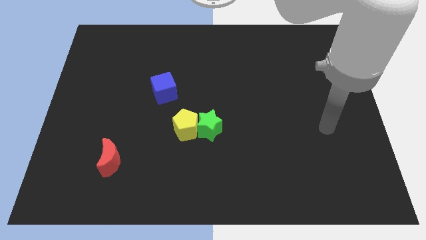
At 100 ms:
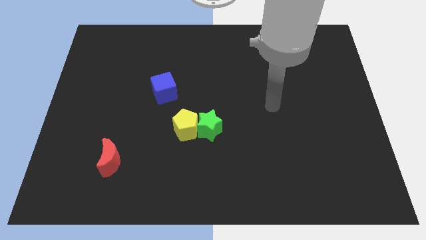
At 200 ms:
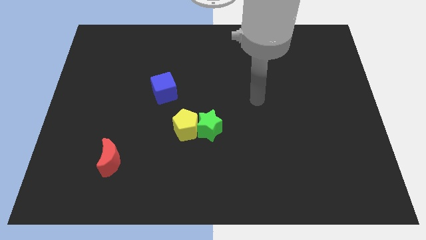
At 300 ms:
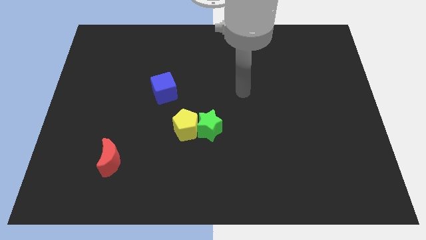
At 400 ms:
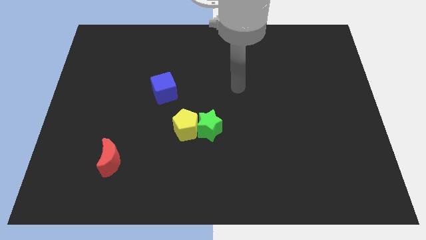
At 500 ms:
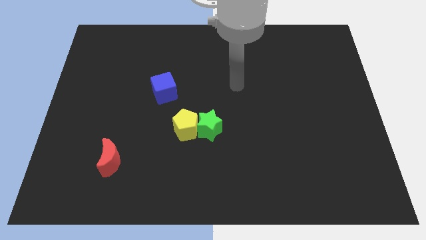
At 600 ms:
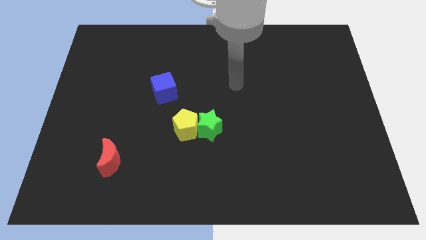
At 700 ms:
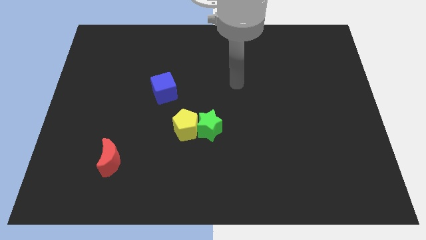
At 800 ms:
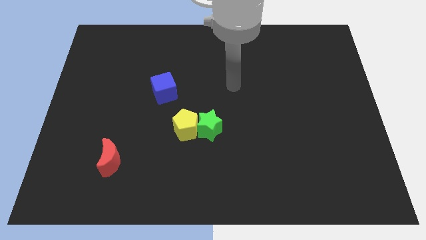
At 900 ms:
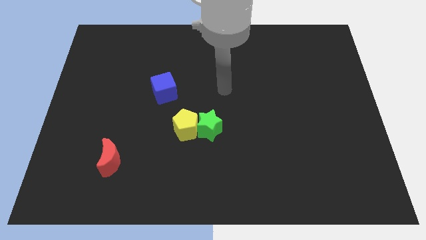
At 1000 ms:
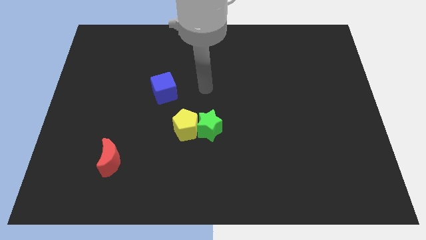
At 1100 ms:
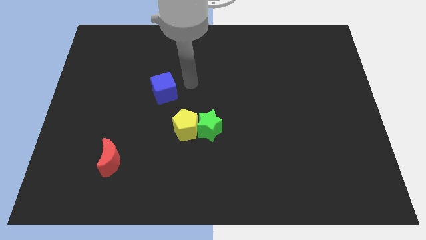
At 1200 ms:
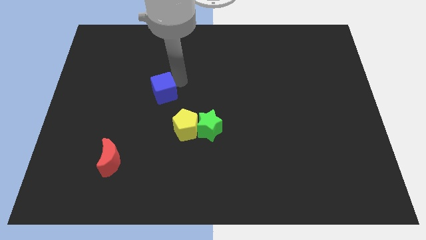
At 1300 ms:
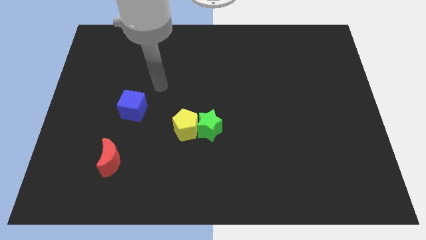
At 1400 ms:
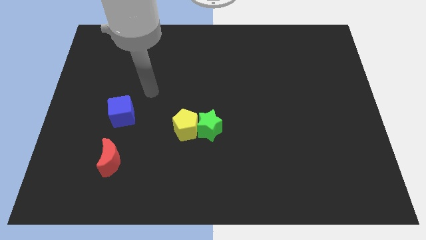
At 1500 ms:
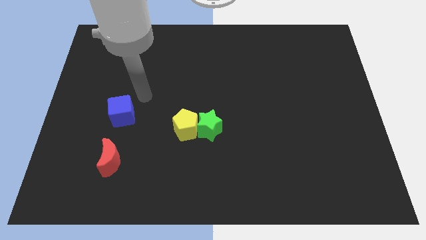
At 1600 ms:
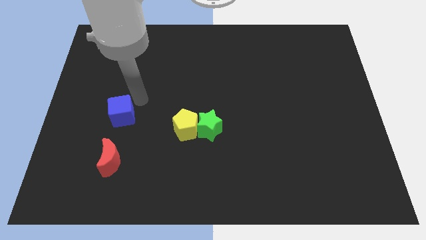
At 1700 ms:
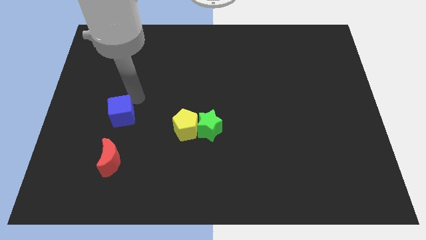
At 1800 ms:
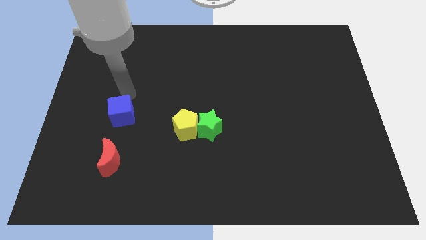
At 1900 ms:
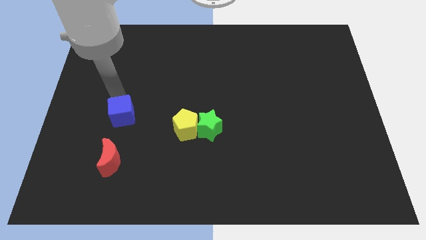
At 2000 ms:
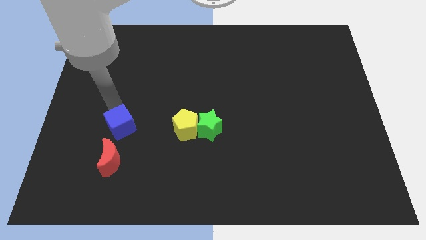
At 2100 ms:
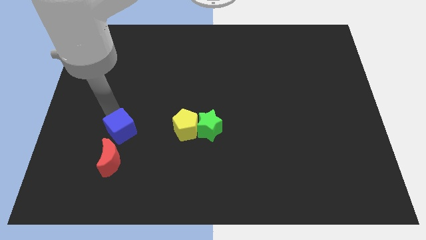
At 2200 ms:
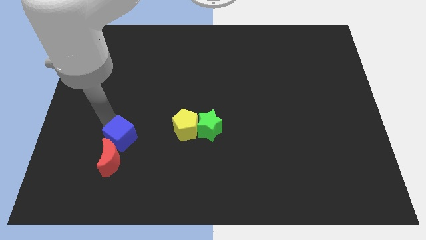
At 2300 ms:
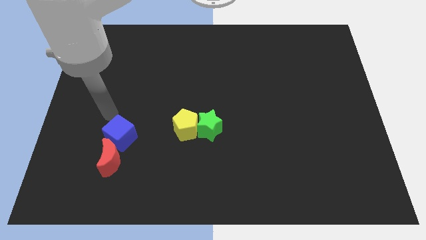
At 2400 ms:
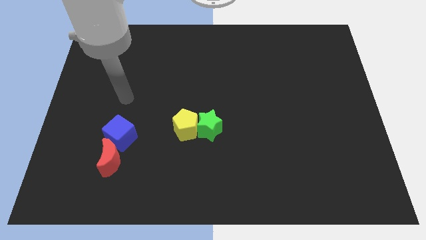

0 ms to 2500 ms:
move the blue cube towards the moon

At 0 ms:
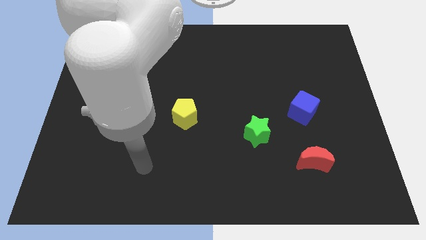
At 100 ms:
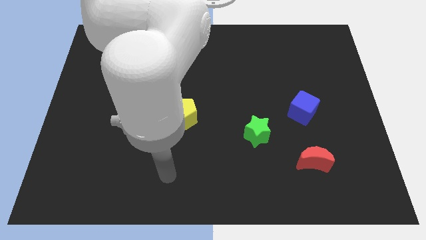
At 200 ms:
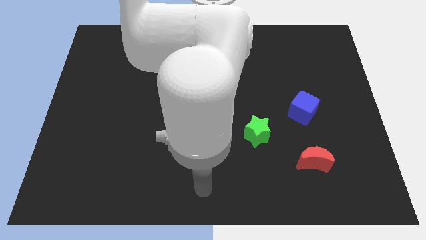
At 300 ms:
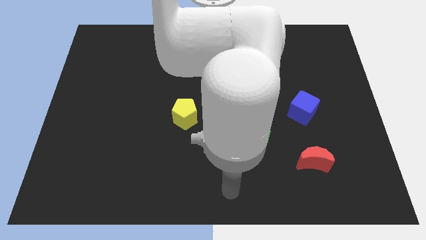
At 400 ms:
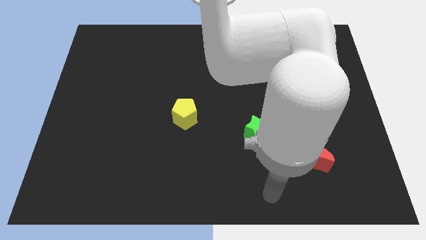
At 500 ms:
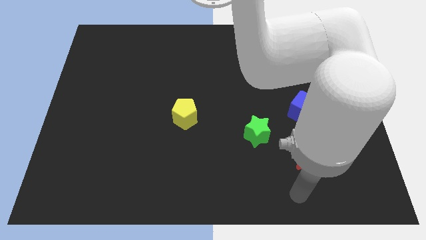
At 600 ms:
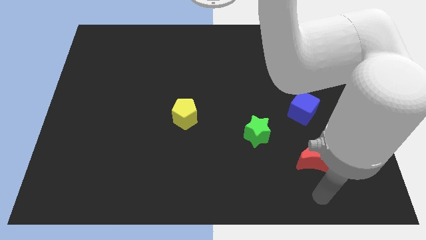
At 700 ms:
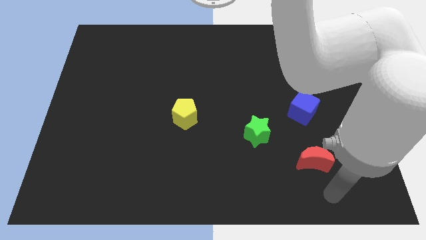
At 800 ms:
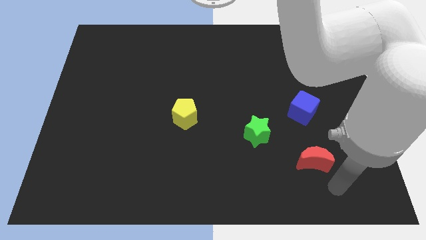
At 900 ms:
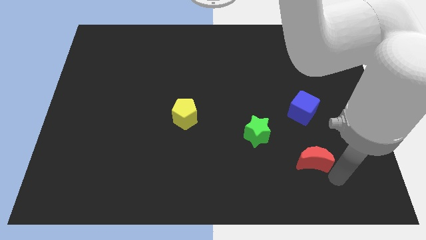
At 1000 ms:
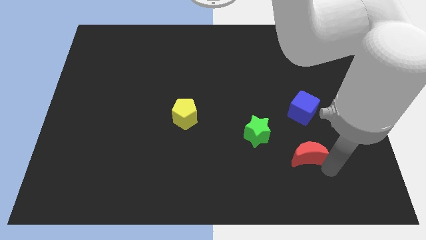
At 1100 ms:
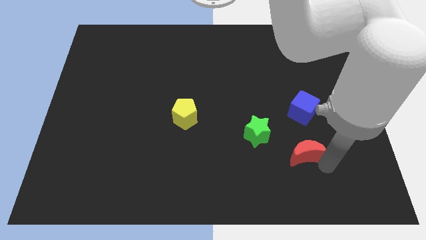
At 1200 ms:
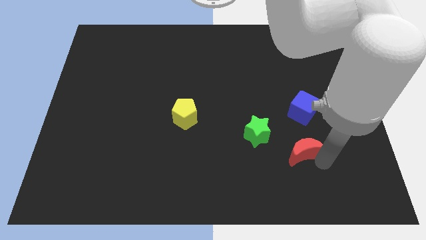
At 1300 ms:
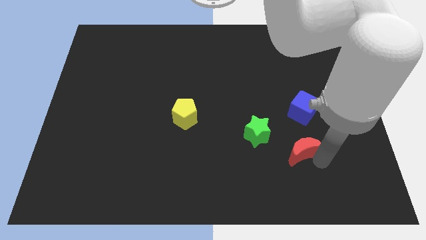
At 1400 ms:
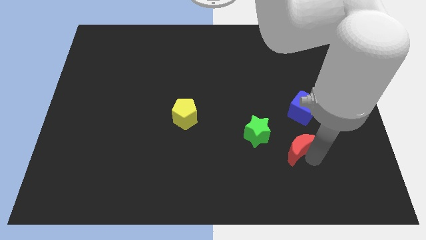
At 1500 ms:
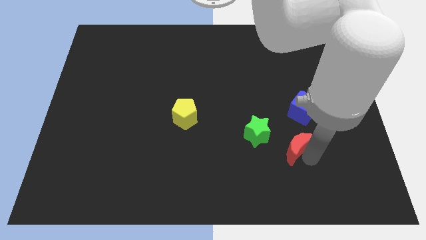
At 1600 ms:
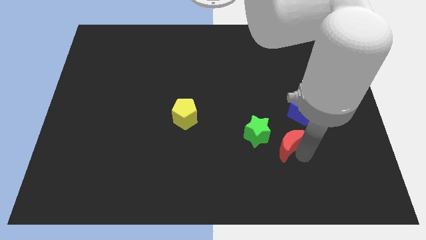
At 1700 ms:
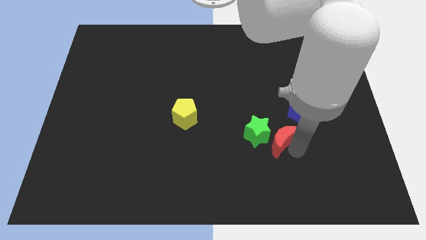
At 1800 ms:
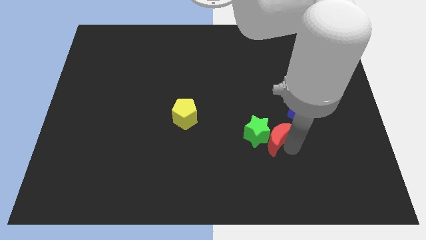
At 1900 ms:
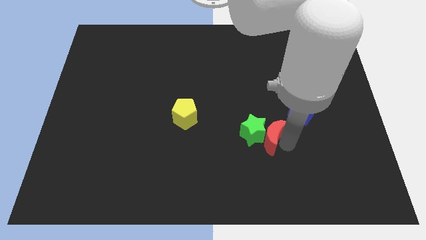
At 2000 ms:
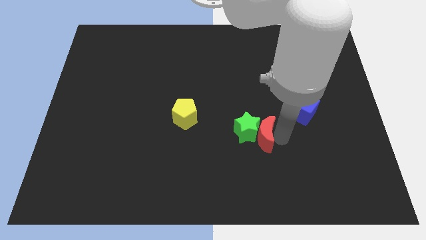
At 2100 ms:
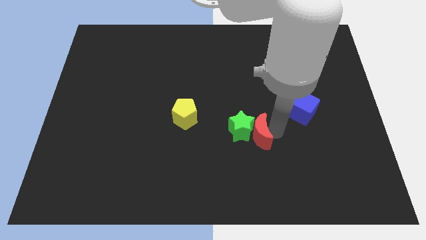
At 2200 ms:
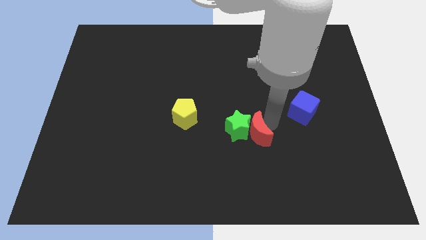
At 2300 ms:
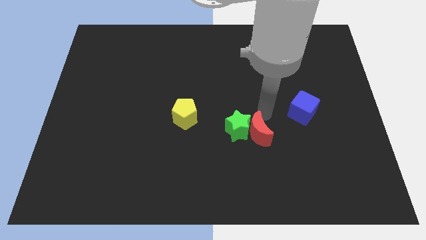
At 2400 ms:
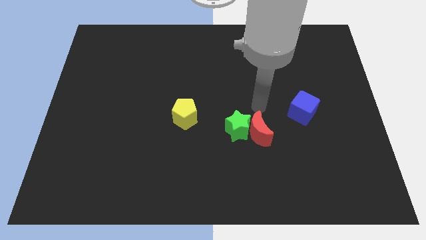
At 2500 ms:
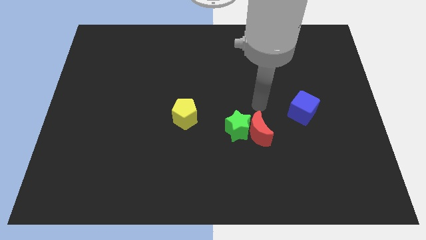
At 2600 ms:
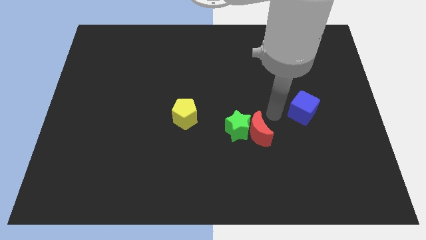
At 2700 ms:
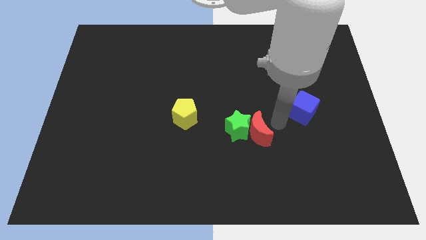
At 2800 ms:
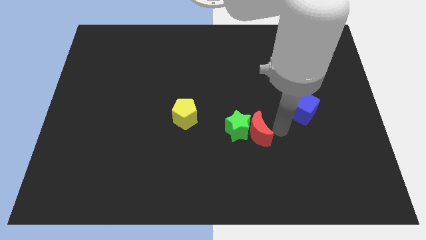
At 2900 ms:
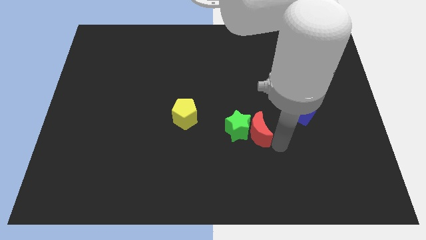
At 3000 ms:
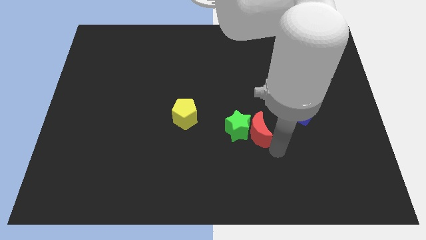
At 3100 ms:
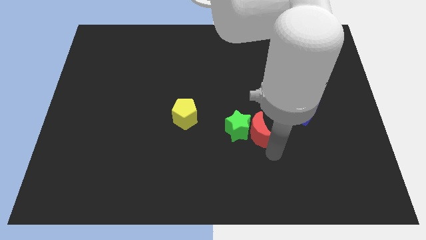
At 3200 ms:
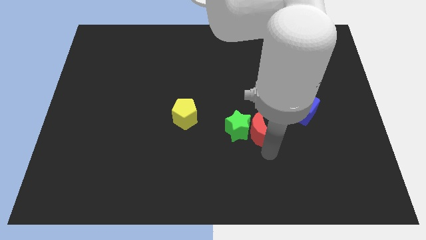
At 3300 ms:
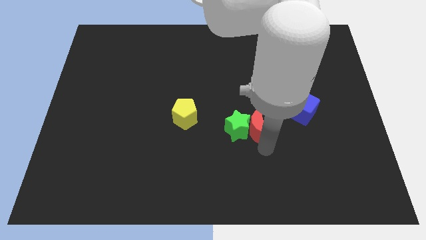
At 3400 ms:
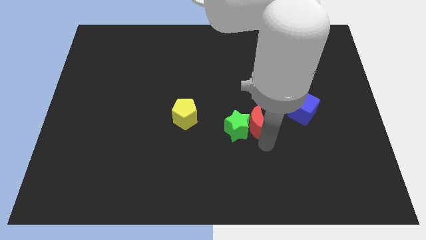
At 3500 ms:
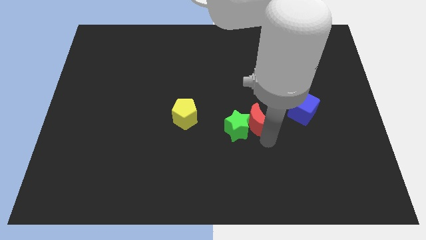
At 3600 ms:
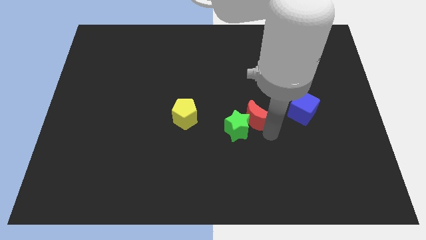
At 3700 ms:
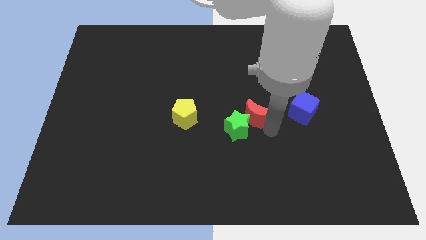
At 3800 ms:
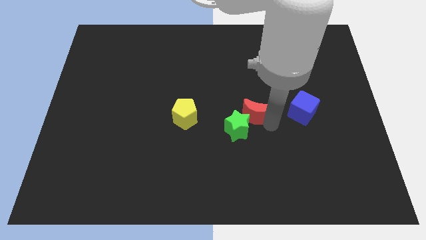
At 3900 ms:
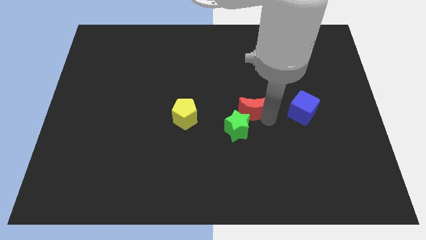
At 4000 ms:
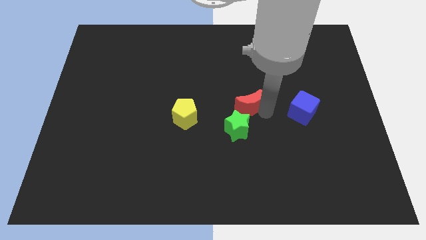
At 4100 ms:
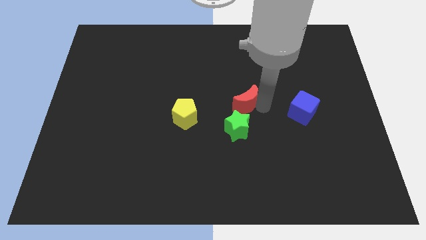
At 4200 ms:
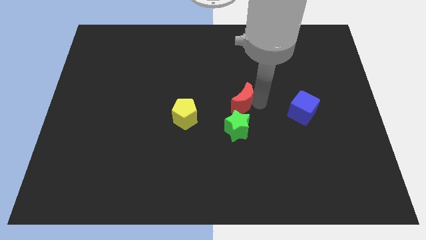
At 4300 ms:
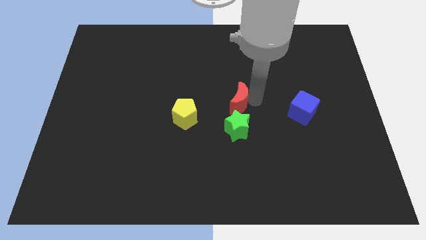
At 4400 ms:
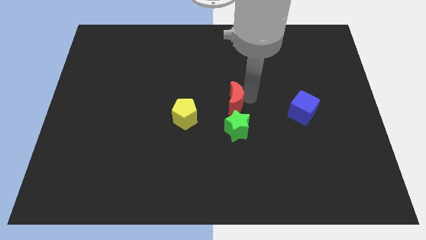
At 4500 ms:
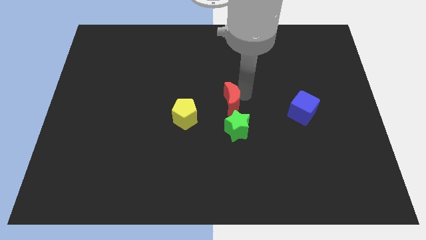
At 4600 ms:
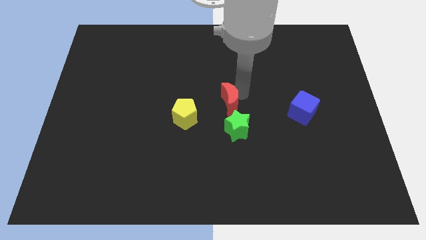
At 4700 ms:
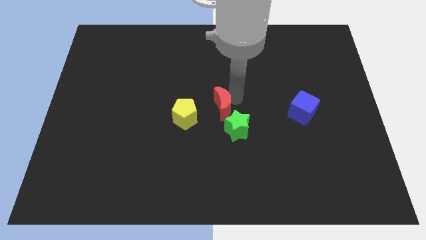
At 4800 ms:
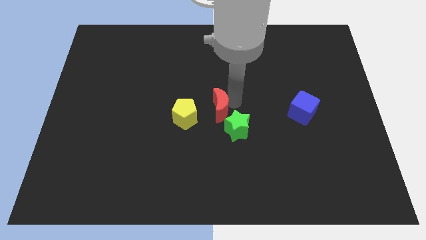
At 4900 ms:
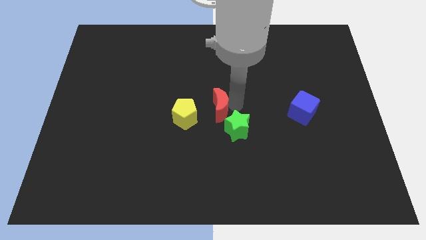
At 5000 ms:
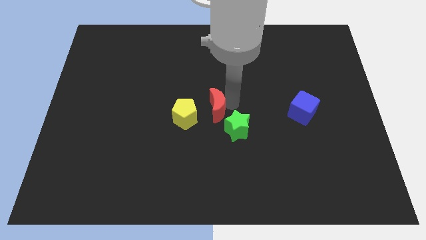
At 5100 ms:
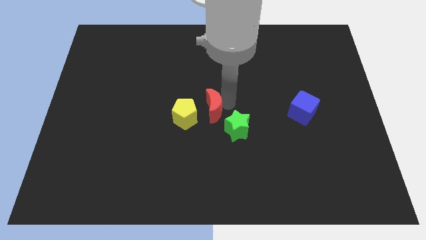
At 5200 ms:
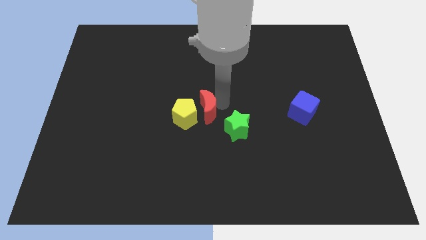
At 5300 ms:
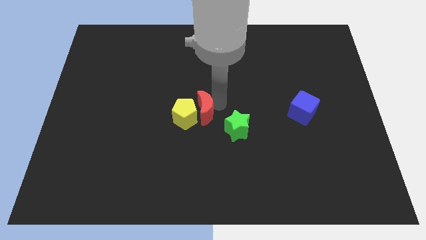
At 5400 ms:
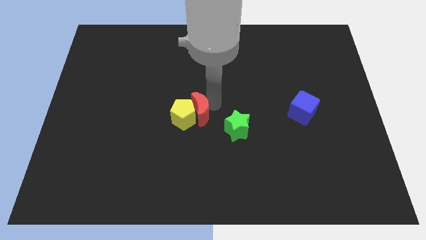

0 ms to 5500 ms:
move the red moon close to the yellow block

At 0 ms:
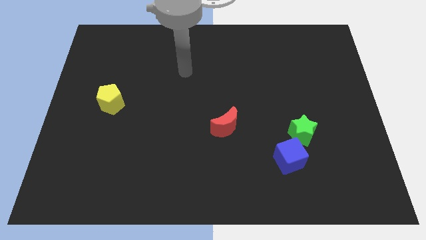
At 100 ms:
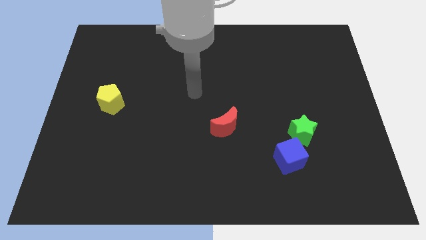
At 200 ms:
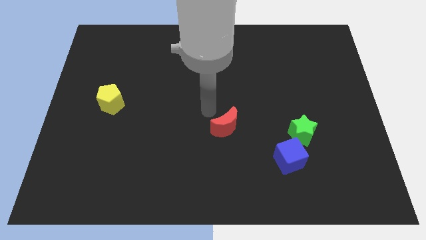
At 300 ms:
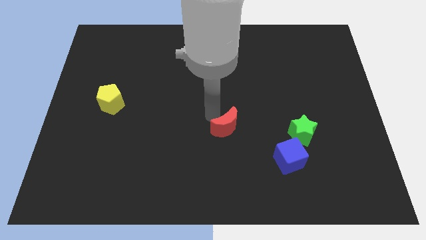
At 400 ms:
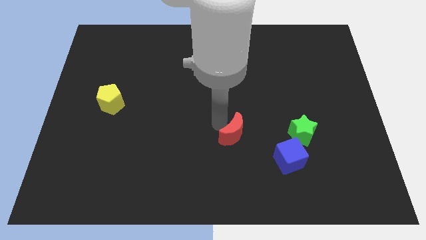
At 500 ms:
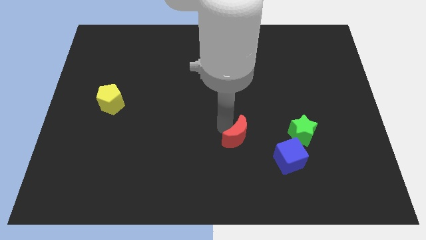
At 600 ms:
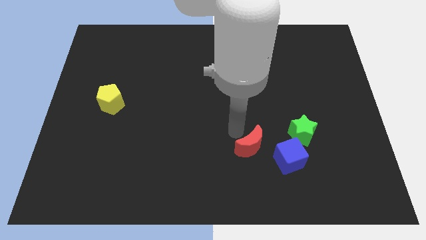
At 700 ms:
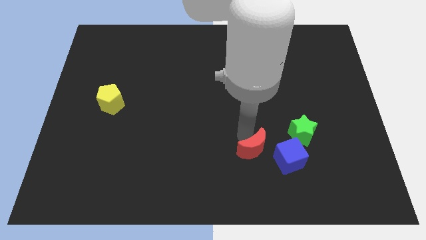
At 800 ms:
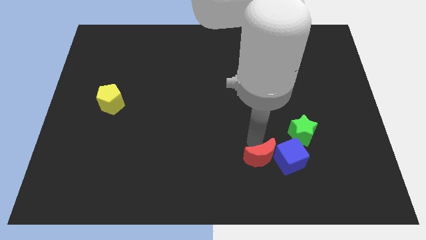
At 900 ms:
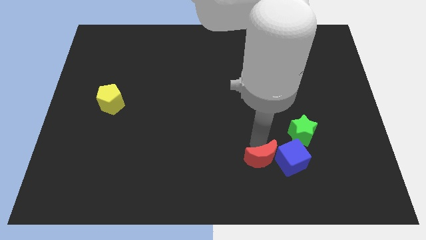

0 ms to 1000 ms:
put the moon next to the blue block
